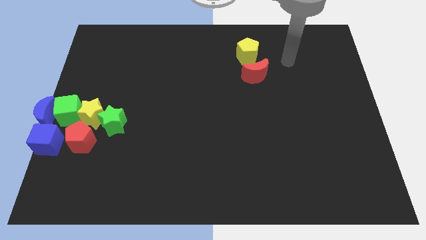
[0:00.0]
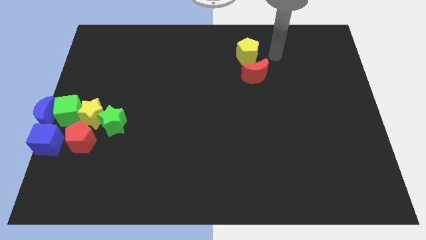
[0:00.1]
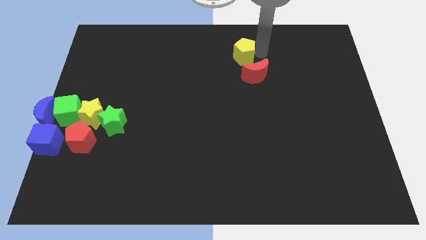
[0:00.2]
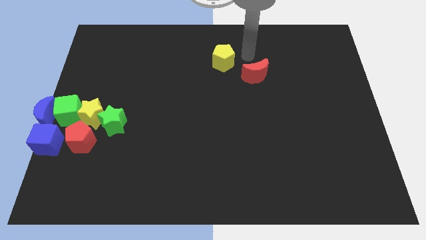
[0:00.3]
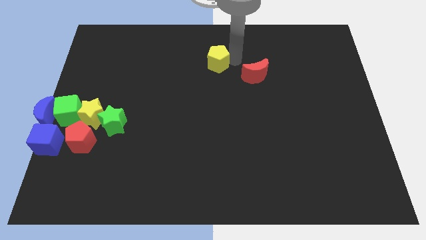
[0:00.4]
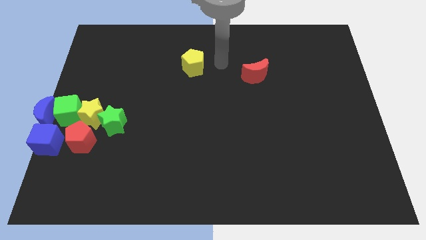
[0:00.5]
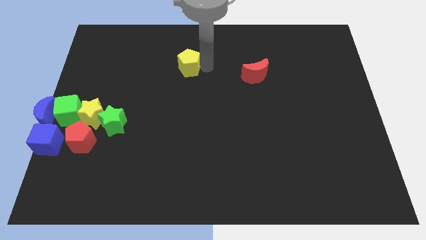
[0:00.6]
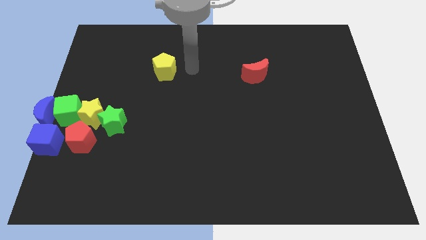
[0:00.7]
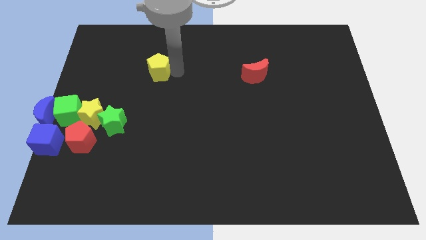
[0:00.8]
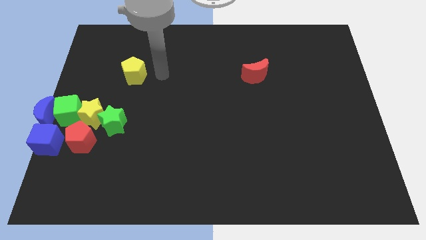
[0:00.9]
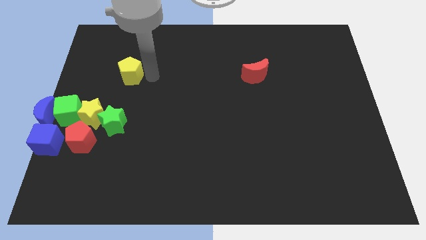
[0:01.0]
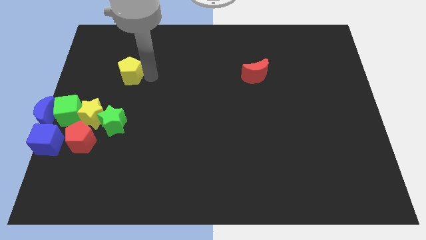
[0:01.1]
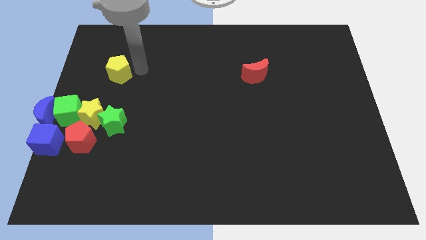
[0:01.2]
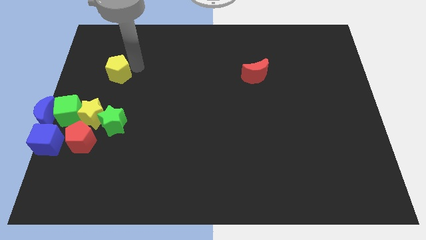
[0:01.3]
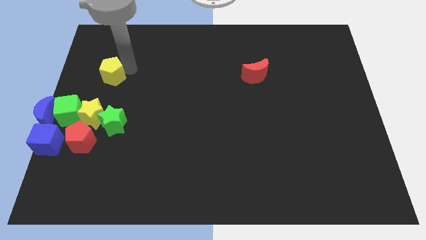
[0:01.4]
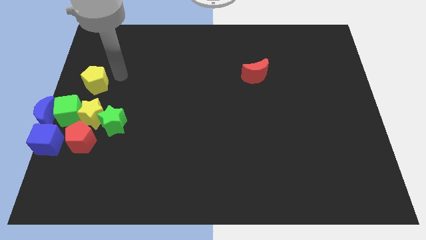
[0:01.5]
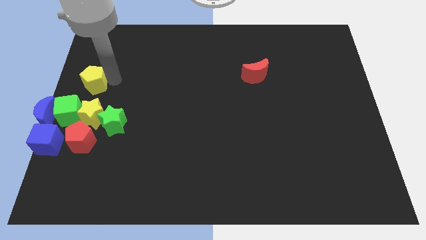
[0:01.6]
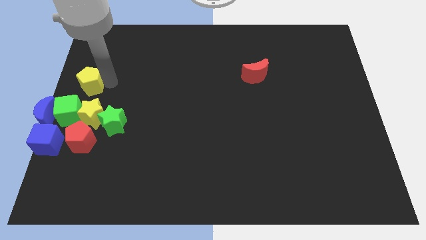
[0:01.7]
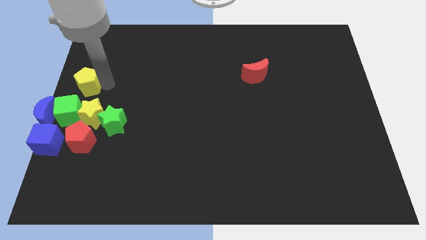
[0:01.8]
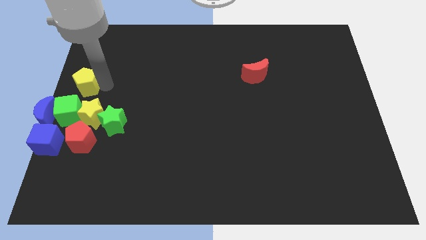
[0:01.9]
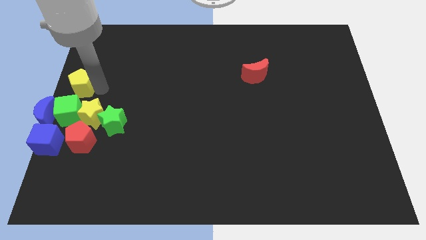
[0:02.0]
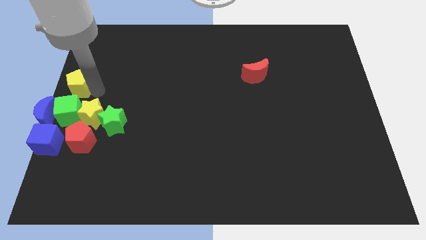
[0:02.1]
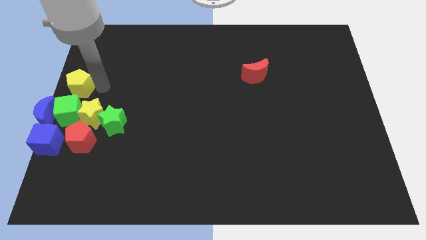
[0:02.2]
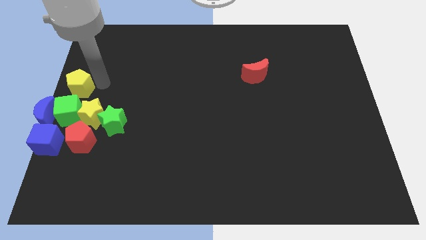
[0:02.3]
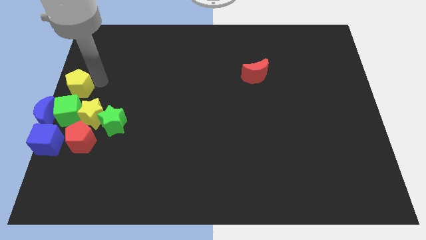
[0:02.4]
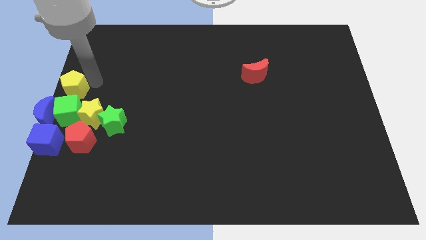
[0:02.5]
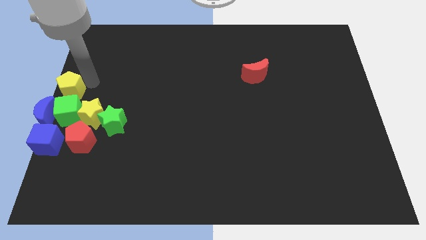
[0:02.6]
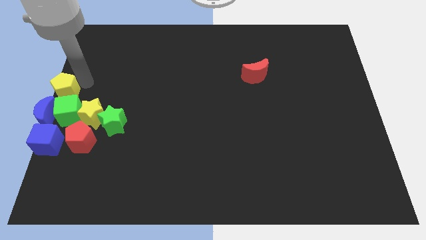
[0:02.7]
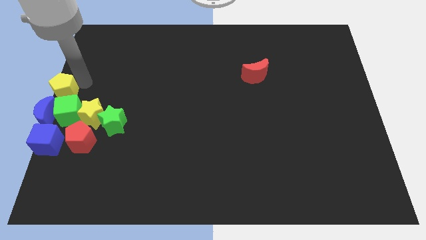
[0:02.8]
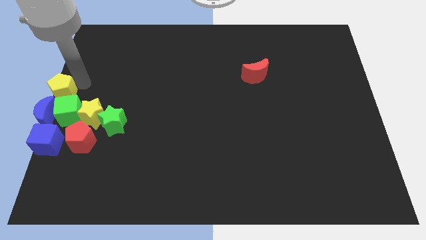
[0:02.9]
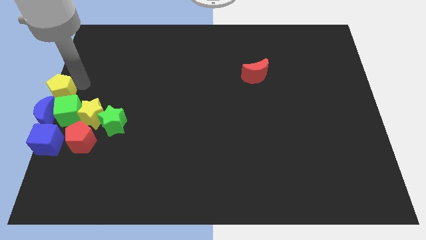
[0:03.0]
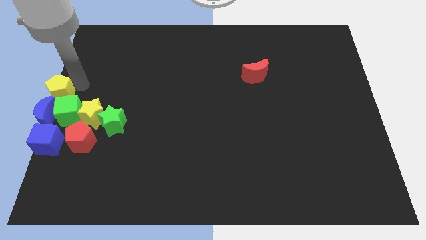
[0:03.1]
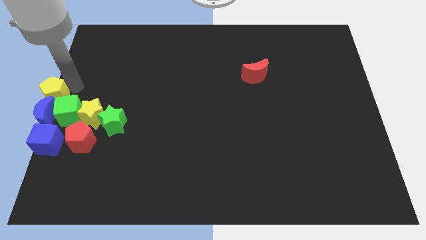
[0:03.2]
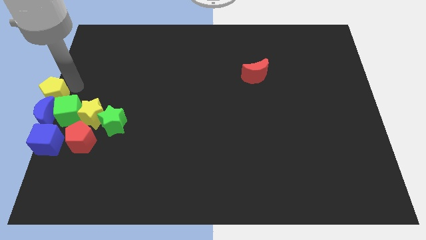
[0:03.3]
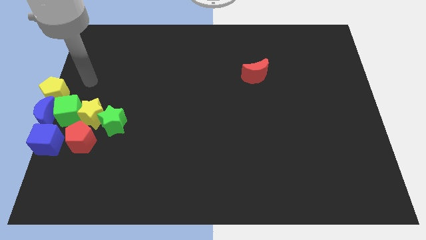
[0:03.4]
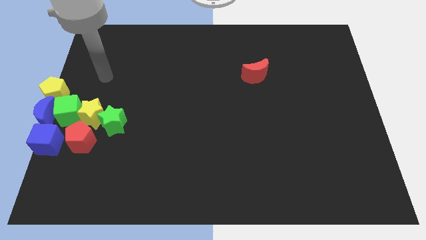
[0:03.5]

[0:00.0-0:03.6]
separate the red moon and yellow pentagon

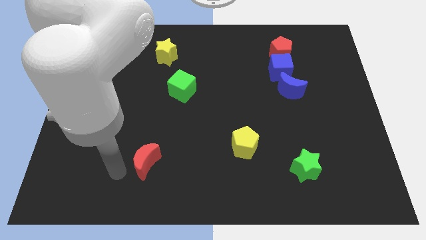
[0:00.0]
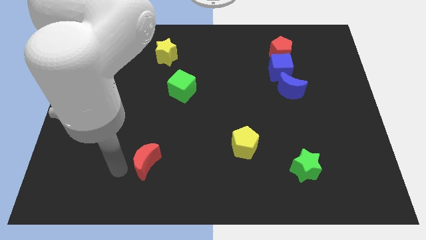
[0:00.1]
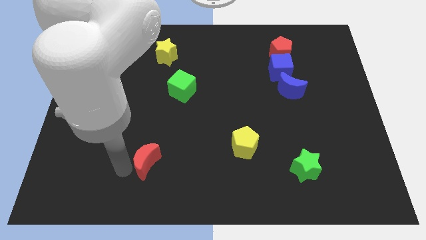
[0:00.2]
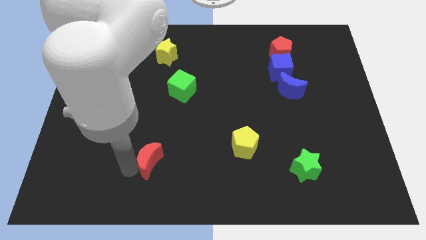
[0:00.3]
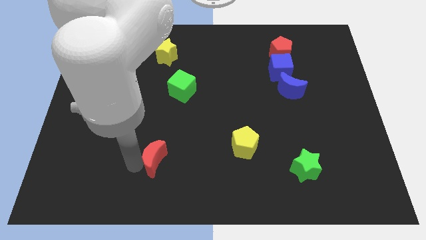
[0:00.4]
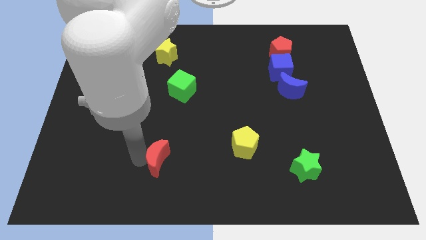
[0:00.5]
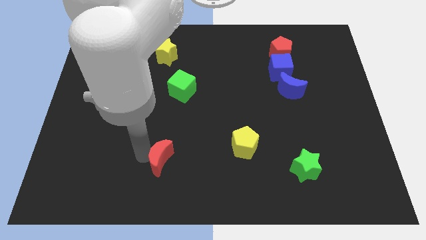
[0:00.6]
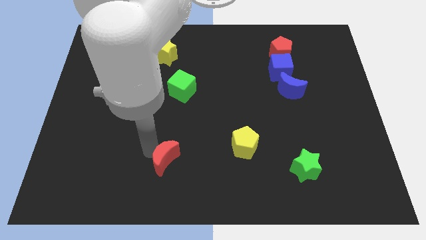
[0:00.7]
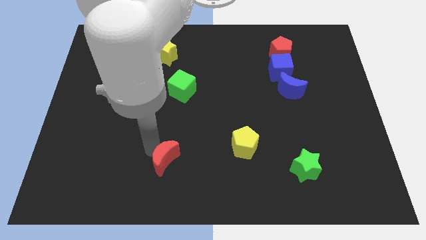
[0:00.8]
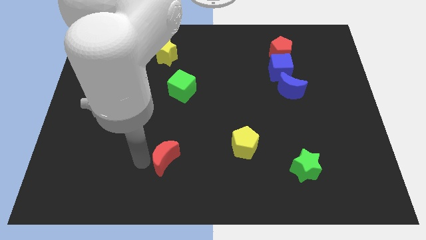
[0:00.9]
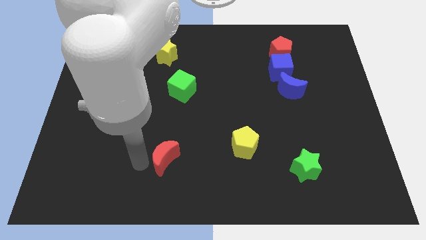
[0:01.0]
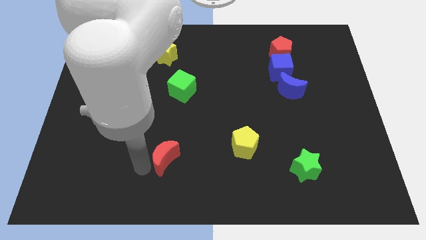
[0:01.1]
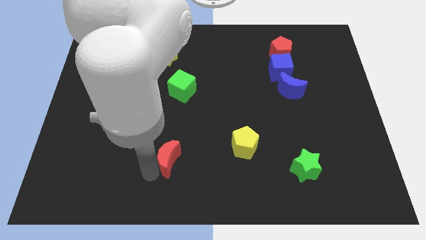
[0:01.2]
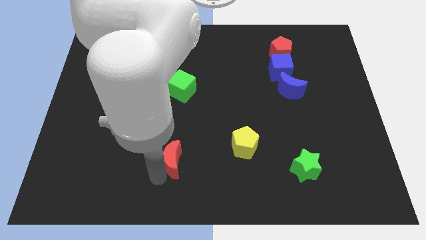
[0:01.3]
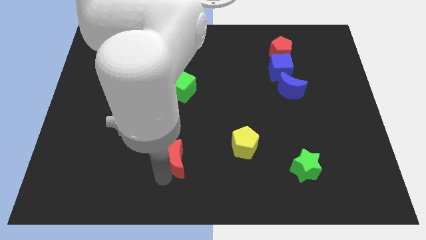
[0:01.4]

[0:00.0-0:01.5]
move the red crescent to the right of the board

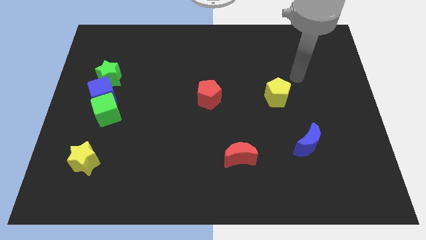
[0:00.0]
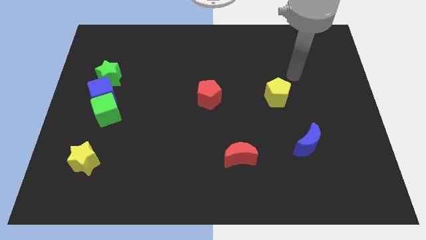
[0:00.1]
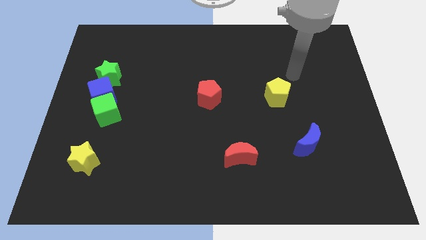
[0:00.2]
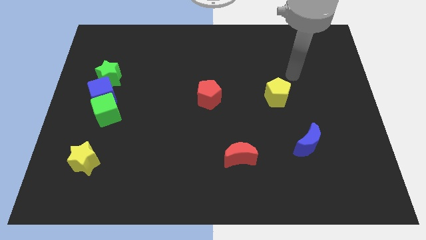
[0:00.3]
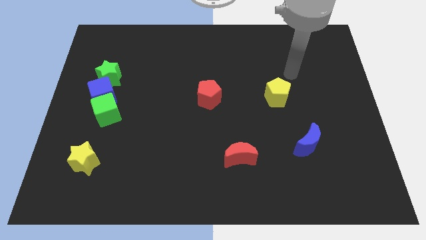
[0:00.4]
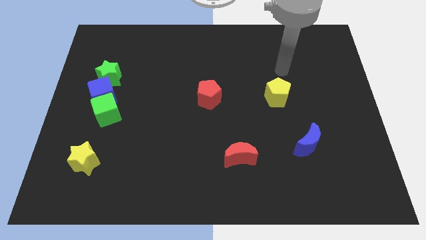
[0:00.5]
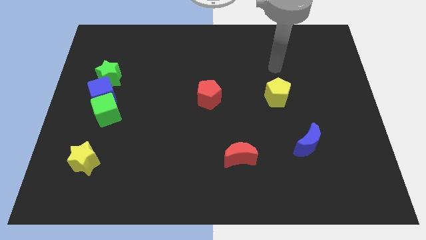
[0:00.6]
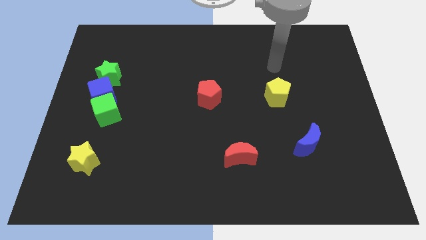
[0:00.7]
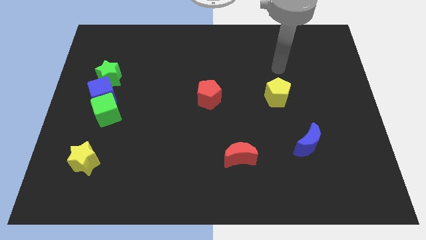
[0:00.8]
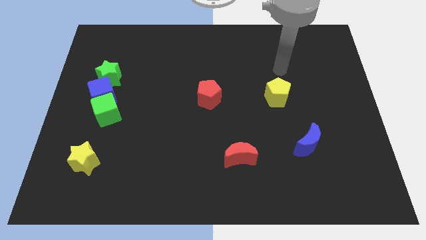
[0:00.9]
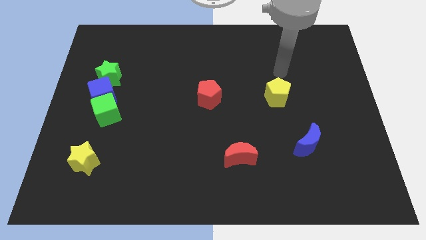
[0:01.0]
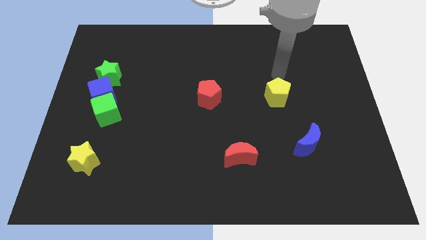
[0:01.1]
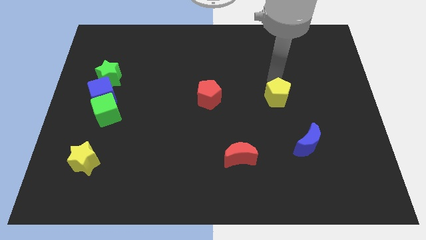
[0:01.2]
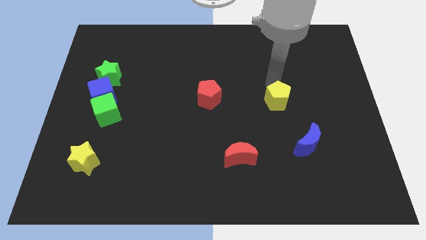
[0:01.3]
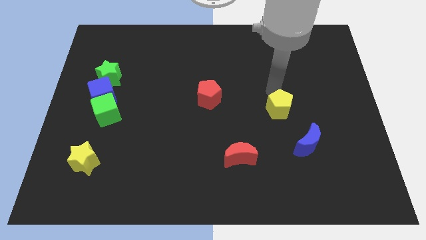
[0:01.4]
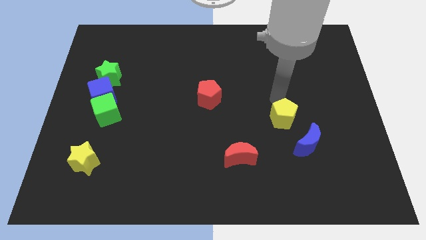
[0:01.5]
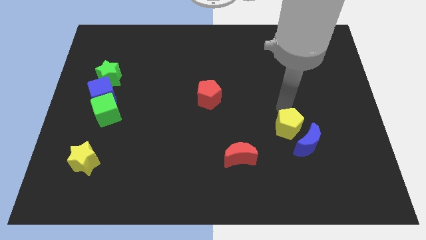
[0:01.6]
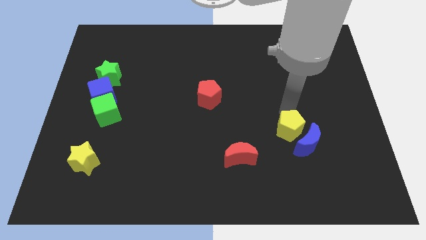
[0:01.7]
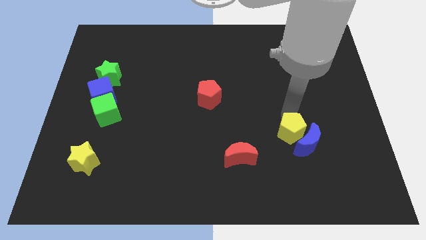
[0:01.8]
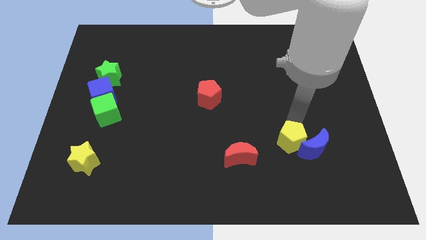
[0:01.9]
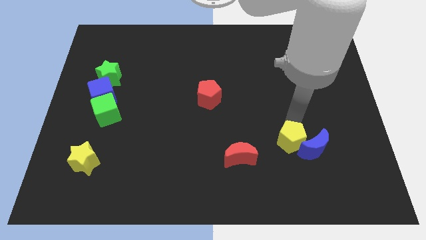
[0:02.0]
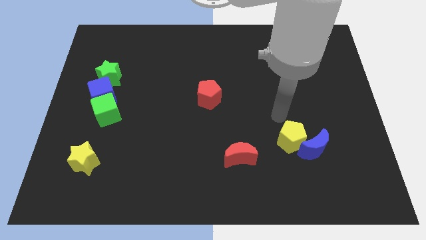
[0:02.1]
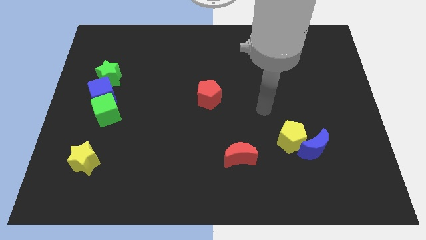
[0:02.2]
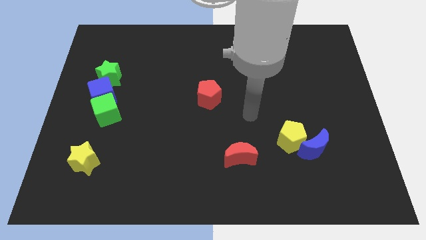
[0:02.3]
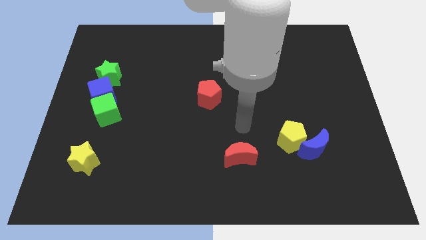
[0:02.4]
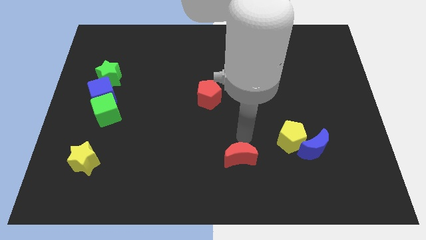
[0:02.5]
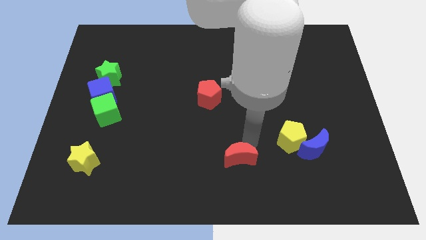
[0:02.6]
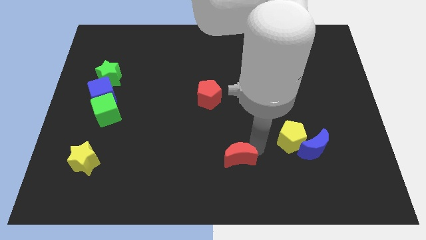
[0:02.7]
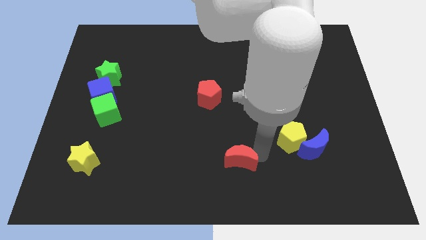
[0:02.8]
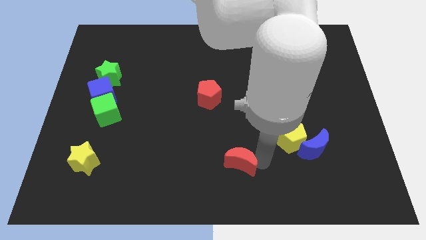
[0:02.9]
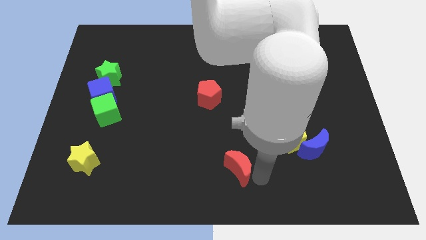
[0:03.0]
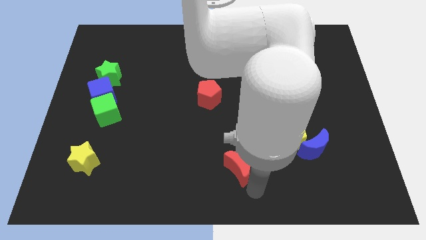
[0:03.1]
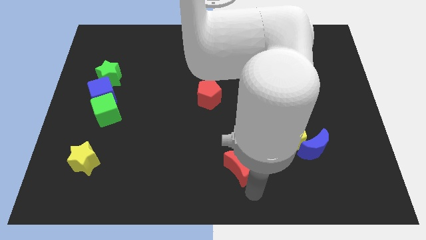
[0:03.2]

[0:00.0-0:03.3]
push the yellow pentagon and the red moon down slightly

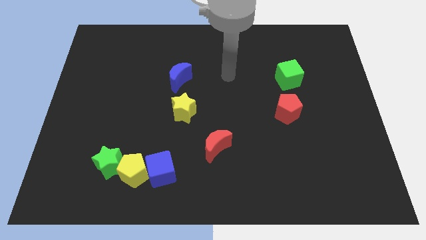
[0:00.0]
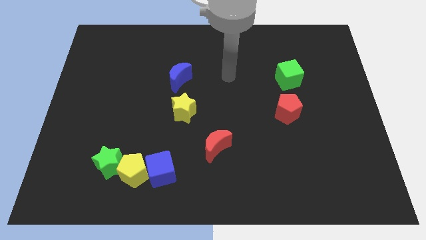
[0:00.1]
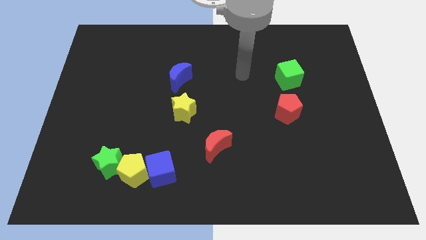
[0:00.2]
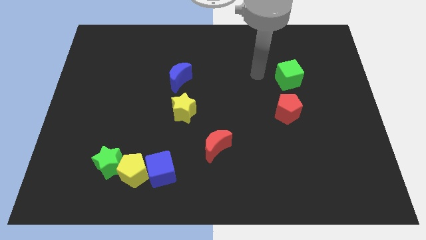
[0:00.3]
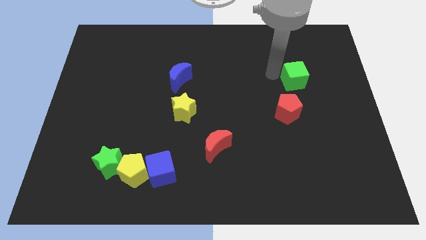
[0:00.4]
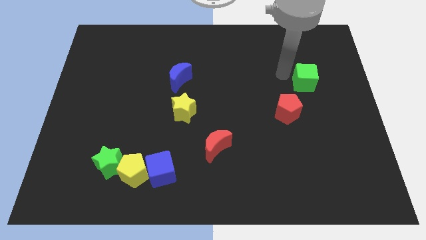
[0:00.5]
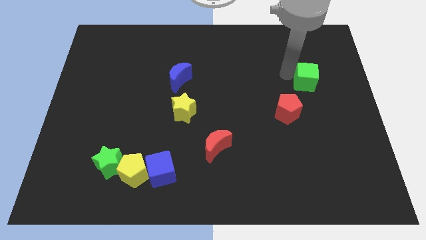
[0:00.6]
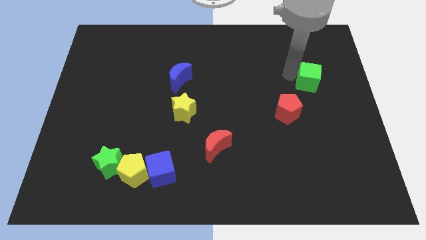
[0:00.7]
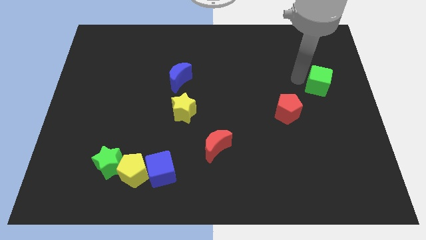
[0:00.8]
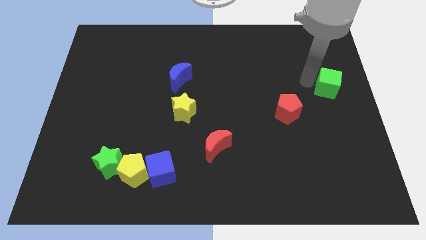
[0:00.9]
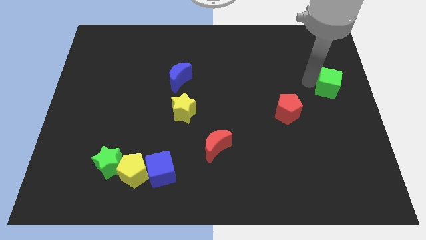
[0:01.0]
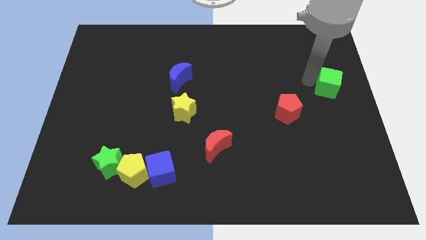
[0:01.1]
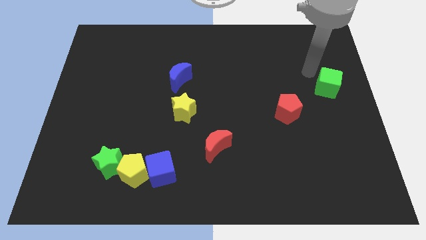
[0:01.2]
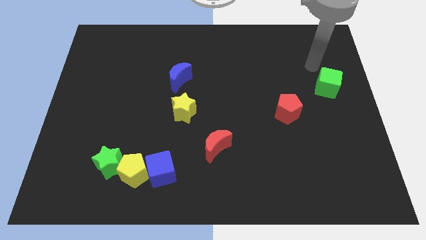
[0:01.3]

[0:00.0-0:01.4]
push the green cube slightly to the right
